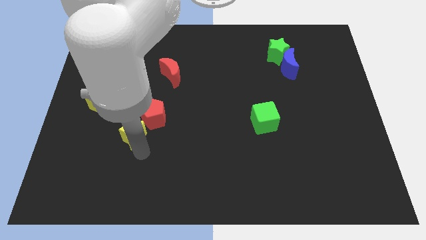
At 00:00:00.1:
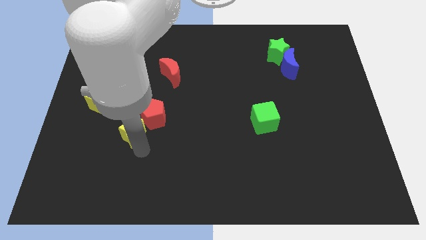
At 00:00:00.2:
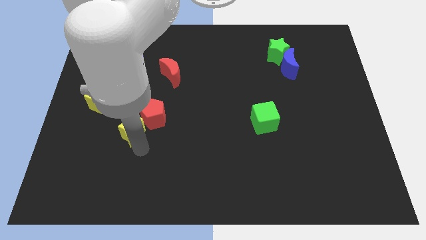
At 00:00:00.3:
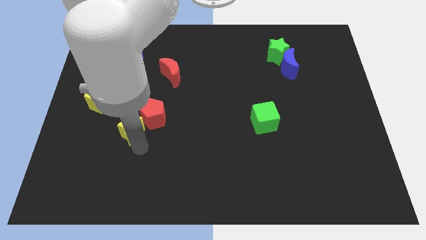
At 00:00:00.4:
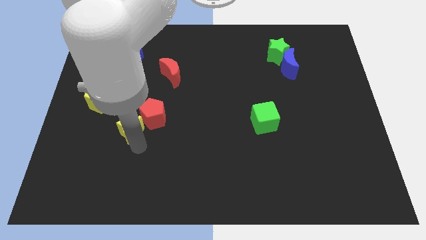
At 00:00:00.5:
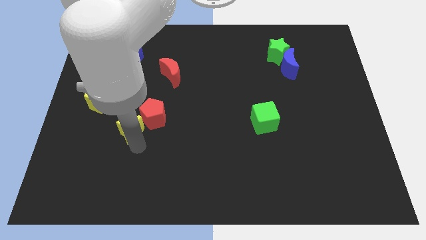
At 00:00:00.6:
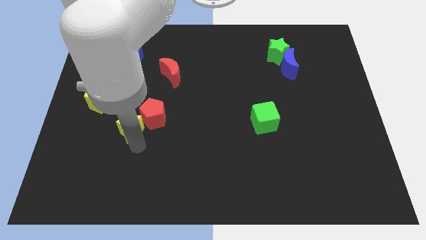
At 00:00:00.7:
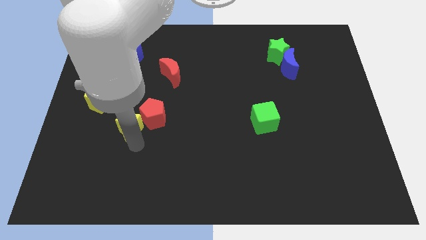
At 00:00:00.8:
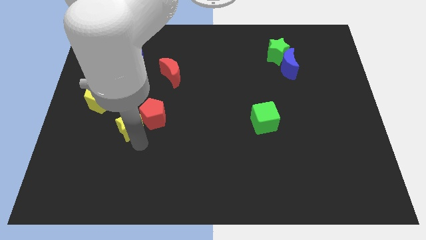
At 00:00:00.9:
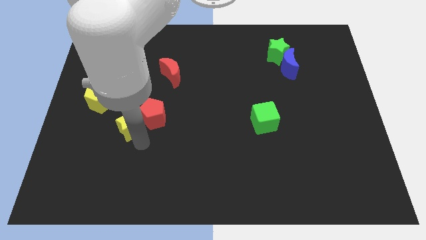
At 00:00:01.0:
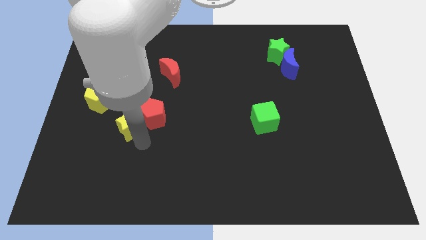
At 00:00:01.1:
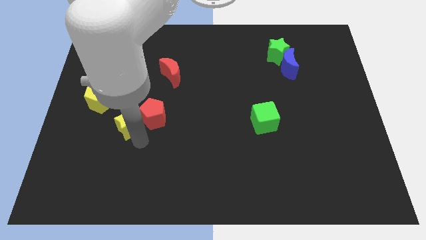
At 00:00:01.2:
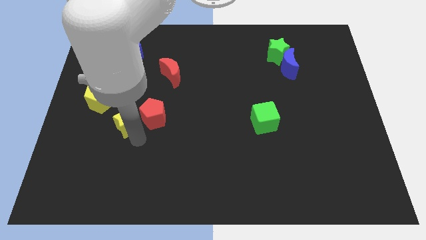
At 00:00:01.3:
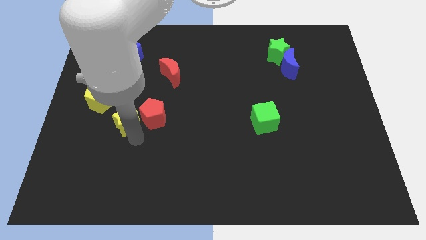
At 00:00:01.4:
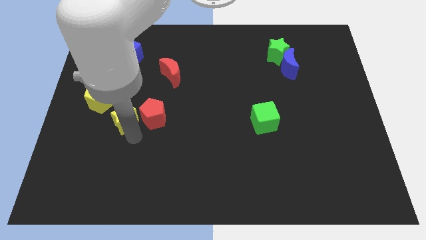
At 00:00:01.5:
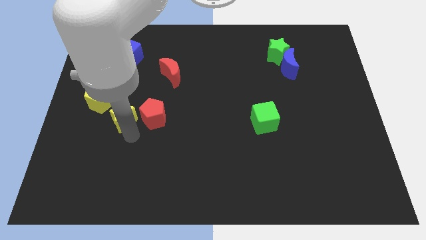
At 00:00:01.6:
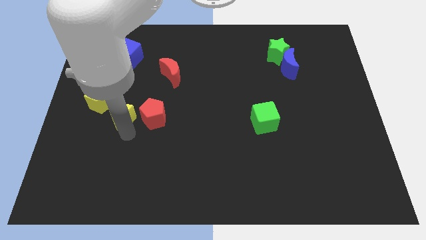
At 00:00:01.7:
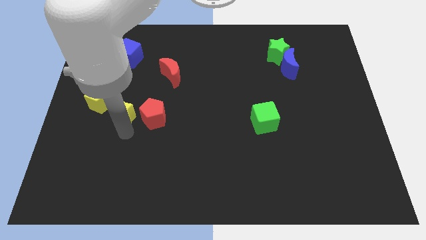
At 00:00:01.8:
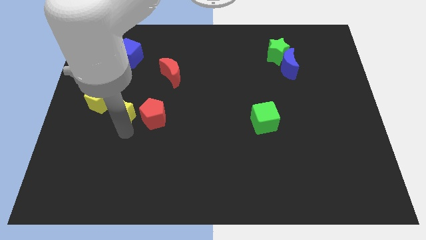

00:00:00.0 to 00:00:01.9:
move yellow star to the left of red pentagon

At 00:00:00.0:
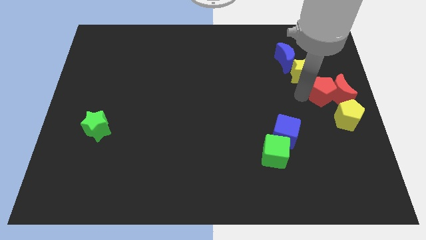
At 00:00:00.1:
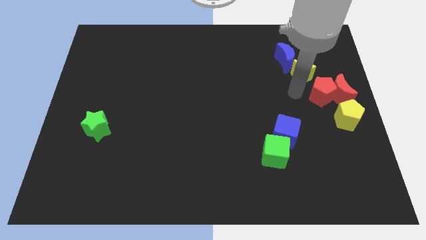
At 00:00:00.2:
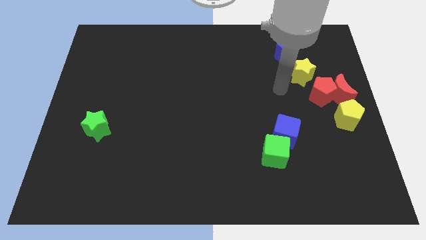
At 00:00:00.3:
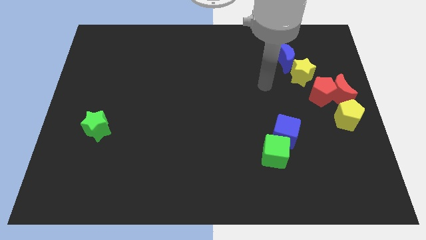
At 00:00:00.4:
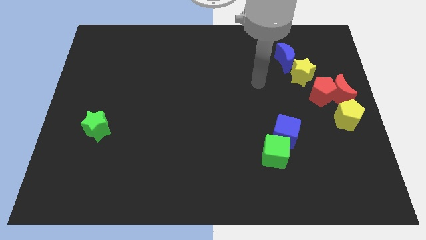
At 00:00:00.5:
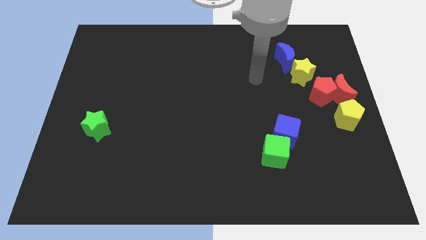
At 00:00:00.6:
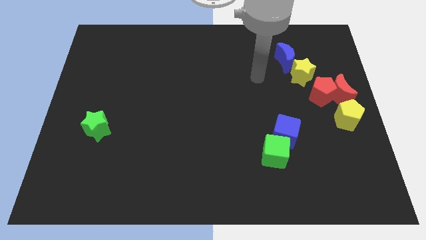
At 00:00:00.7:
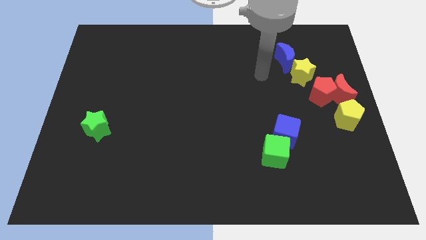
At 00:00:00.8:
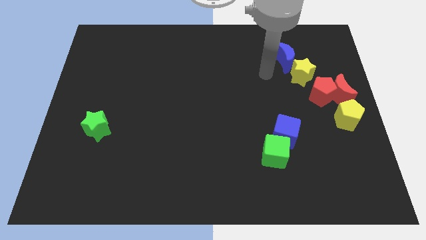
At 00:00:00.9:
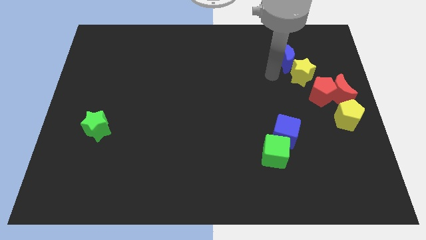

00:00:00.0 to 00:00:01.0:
point your arm towards the left side of yellow star

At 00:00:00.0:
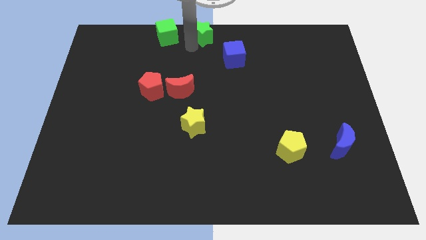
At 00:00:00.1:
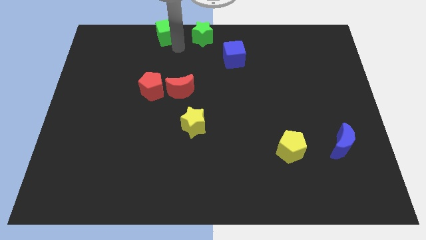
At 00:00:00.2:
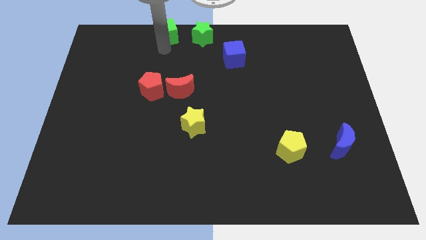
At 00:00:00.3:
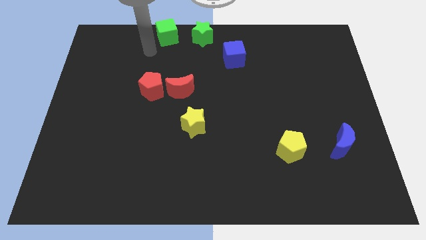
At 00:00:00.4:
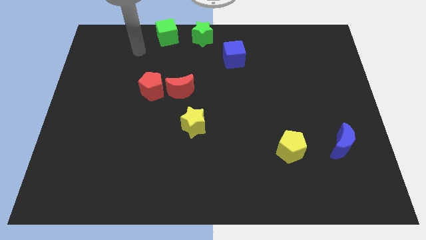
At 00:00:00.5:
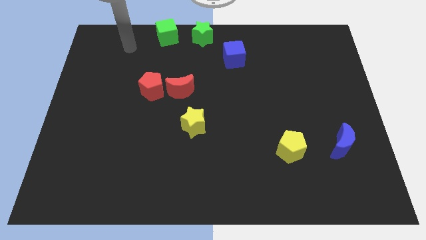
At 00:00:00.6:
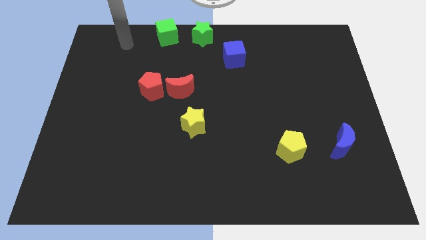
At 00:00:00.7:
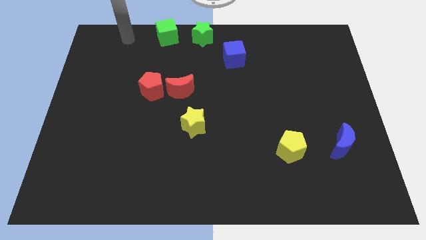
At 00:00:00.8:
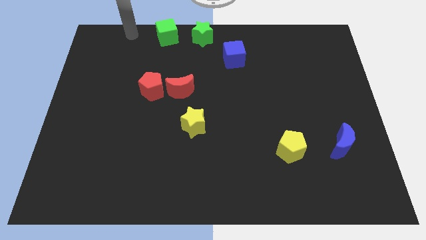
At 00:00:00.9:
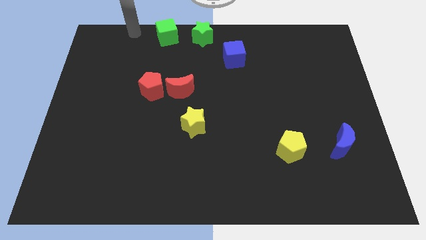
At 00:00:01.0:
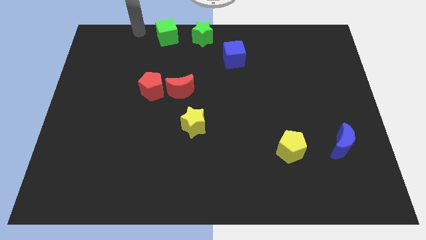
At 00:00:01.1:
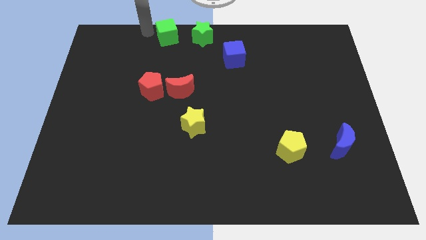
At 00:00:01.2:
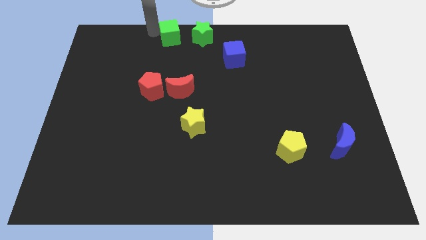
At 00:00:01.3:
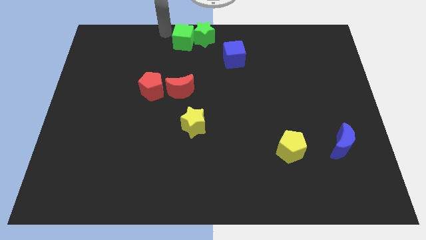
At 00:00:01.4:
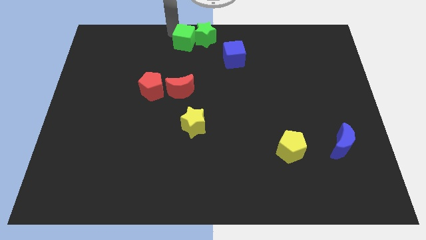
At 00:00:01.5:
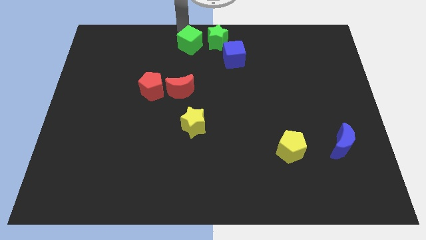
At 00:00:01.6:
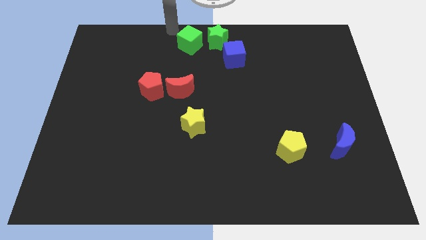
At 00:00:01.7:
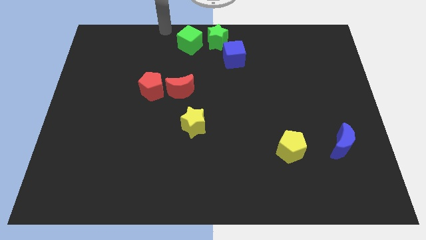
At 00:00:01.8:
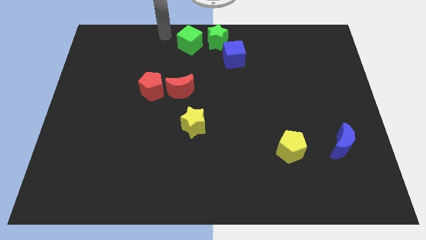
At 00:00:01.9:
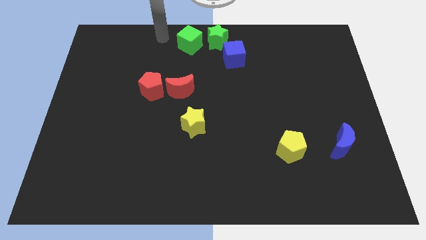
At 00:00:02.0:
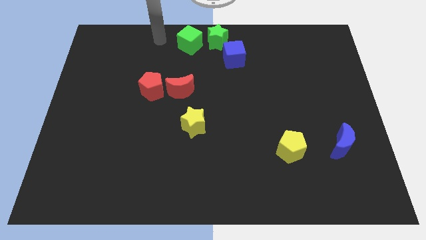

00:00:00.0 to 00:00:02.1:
move the green cube close to the green star

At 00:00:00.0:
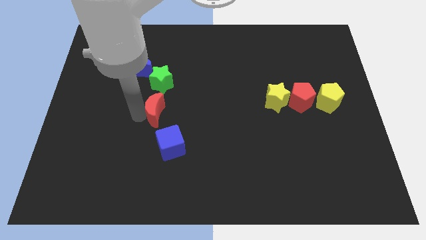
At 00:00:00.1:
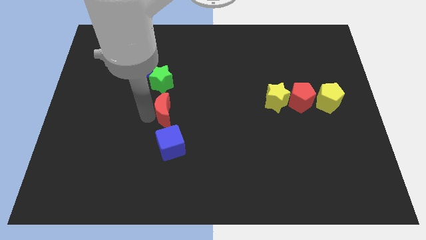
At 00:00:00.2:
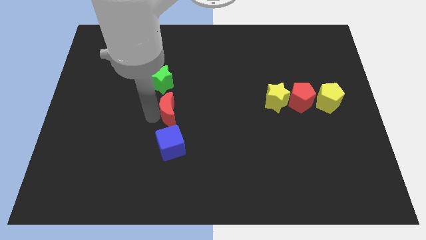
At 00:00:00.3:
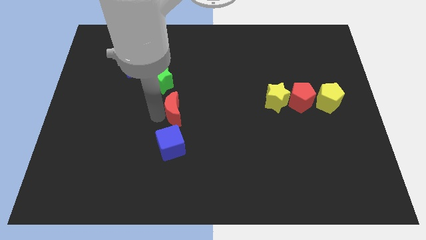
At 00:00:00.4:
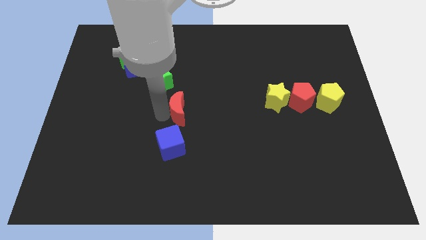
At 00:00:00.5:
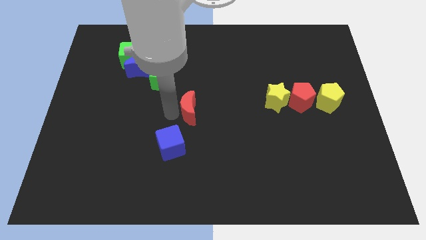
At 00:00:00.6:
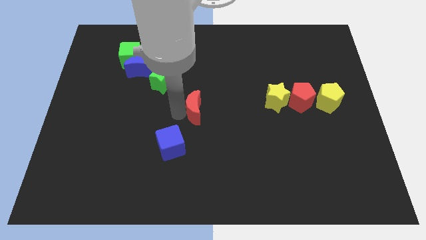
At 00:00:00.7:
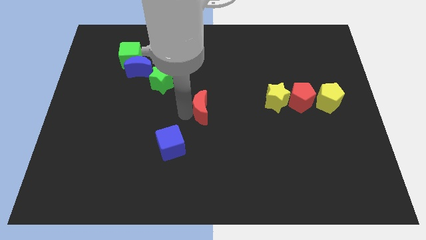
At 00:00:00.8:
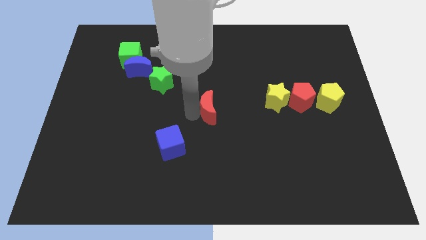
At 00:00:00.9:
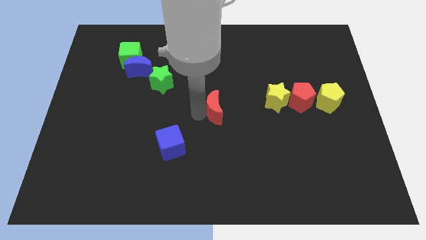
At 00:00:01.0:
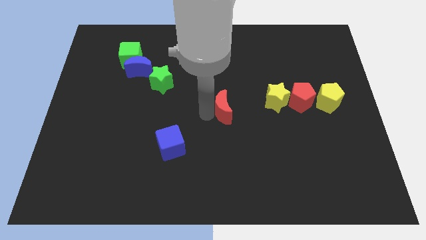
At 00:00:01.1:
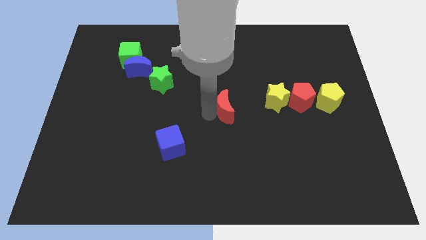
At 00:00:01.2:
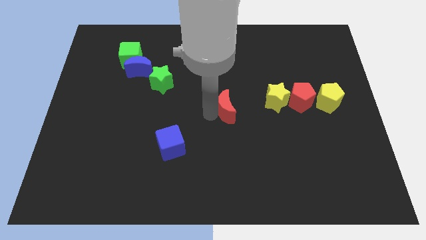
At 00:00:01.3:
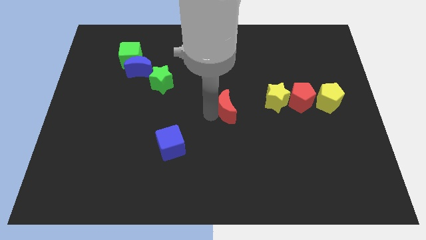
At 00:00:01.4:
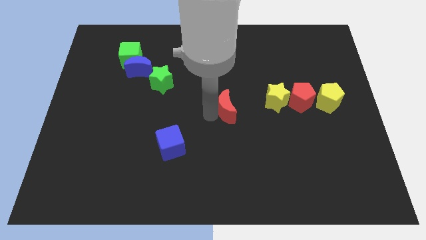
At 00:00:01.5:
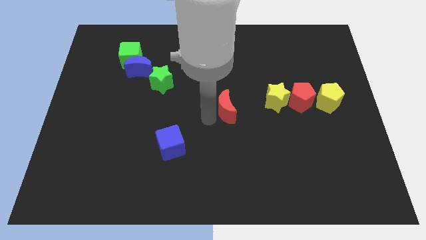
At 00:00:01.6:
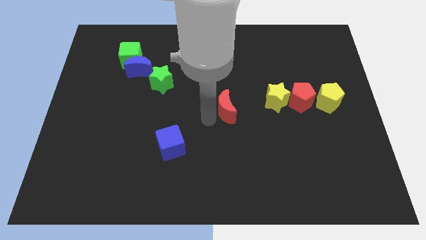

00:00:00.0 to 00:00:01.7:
place the red moon left to the yellow star

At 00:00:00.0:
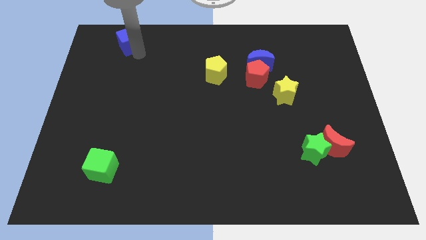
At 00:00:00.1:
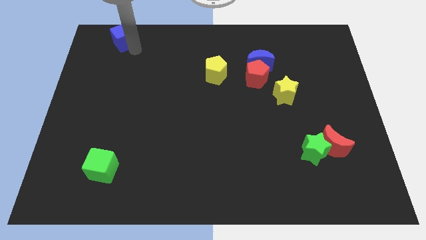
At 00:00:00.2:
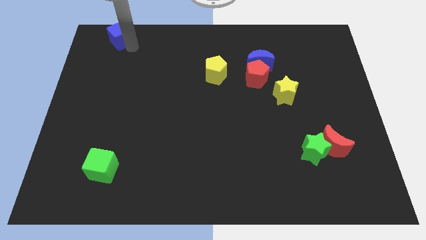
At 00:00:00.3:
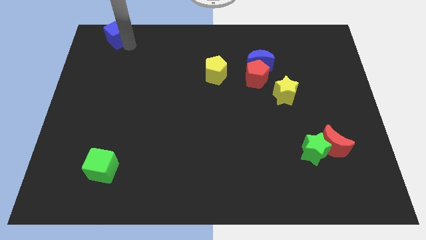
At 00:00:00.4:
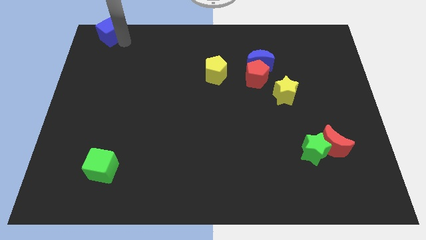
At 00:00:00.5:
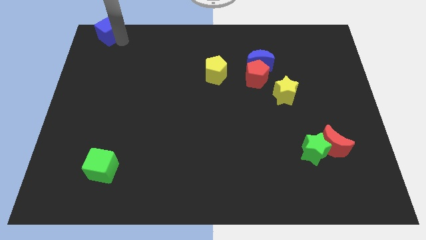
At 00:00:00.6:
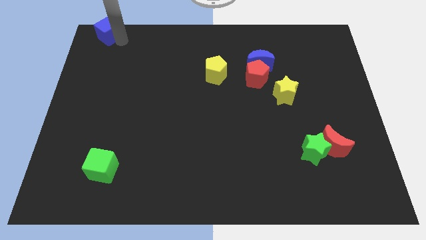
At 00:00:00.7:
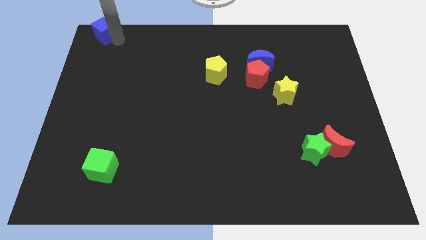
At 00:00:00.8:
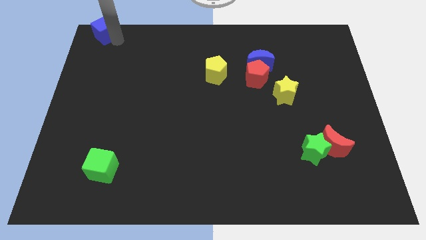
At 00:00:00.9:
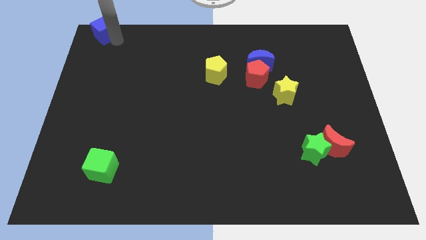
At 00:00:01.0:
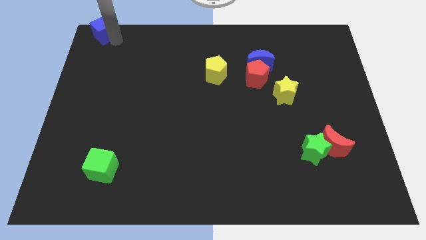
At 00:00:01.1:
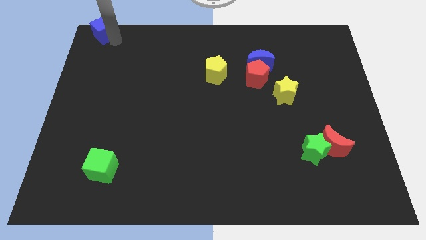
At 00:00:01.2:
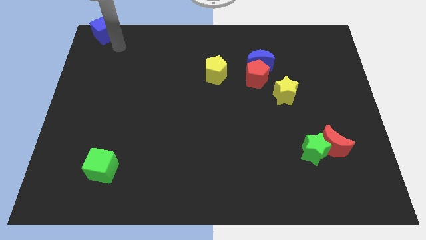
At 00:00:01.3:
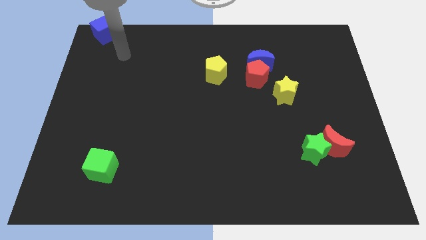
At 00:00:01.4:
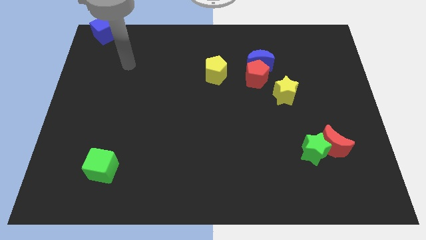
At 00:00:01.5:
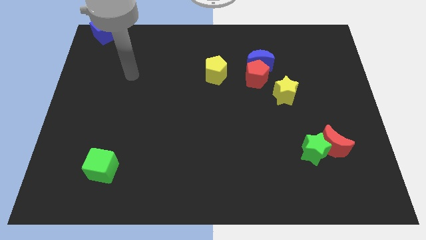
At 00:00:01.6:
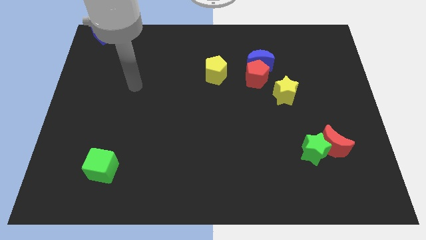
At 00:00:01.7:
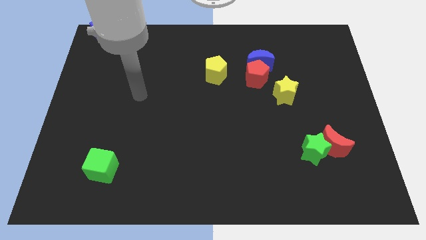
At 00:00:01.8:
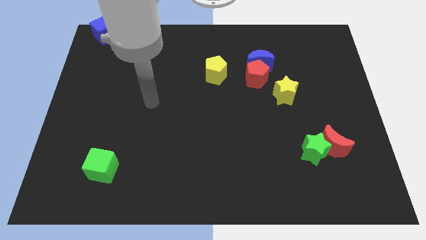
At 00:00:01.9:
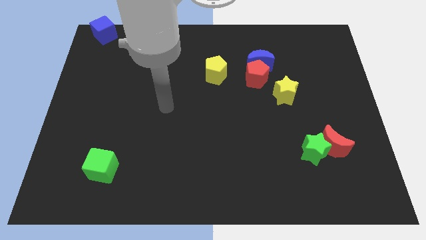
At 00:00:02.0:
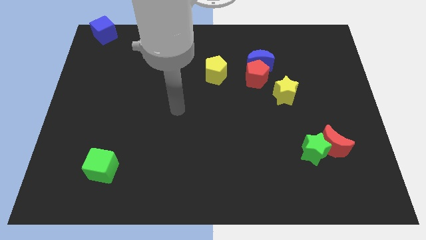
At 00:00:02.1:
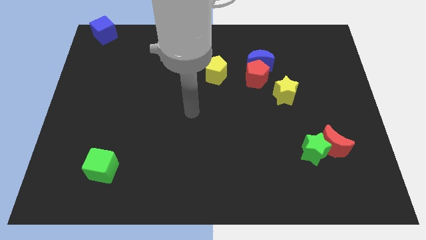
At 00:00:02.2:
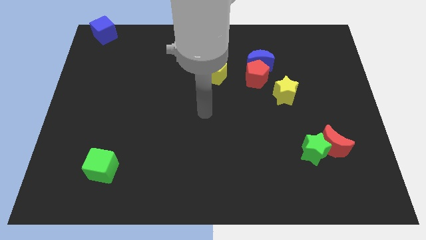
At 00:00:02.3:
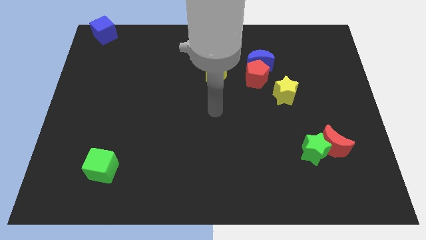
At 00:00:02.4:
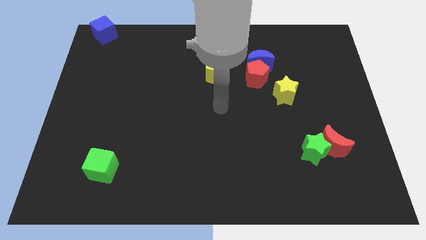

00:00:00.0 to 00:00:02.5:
push the blue cube slightly to the left
